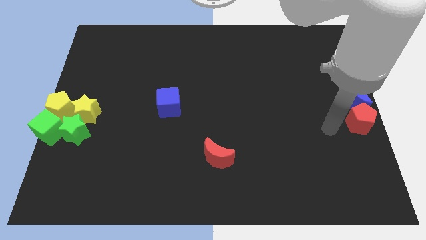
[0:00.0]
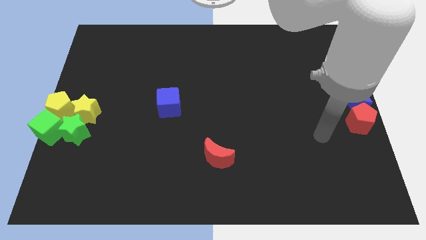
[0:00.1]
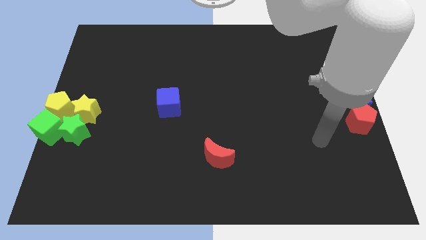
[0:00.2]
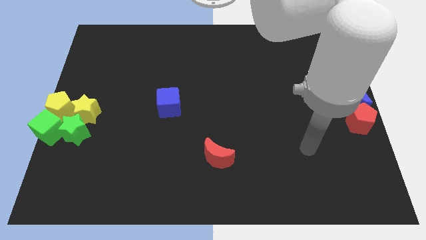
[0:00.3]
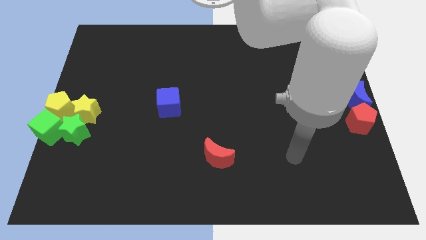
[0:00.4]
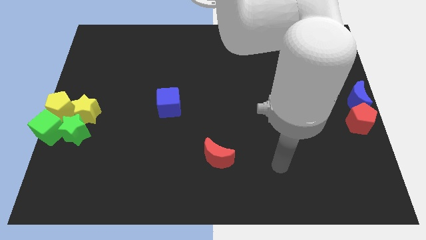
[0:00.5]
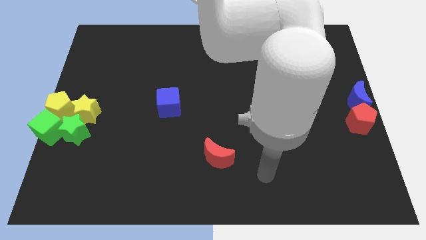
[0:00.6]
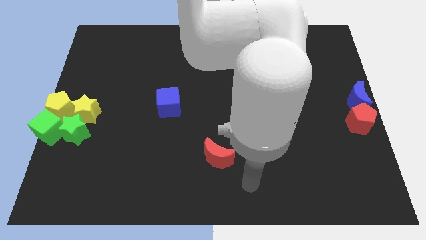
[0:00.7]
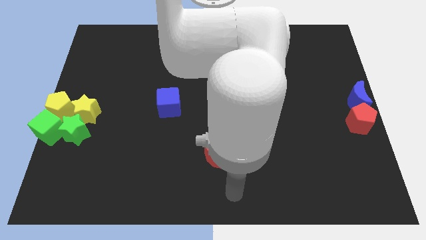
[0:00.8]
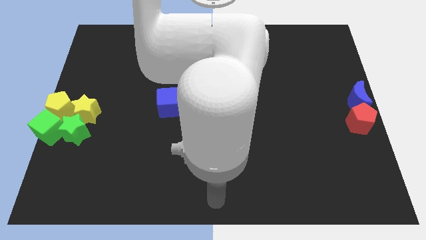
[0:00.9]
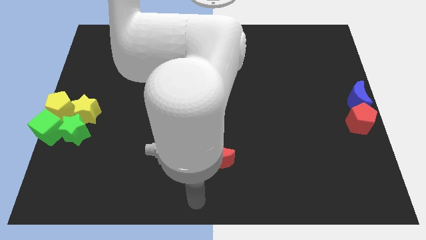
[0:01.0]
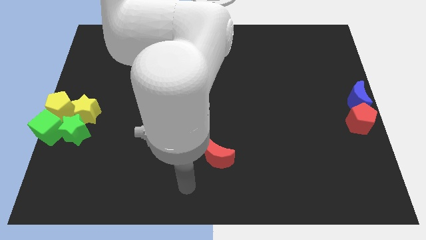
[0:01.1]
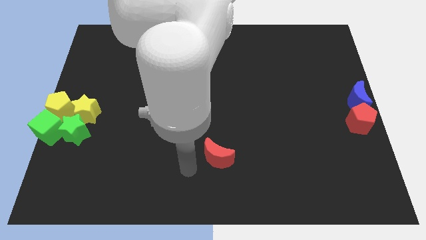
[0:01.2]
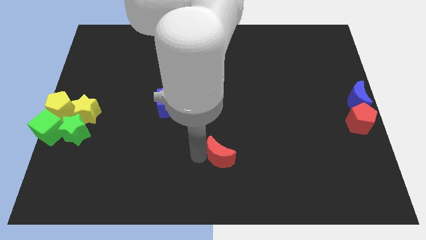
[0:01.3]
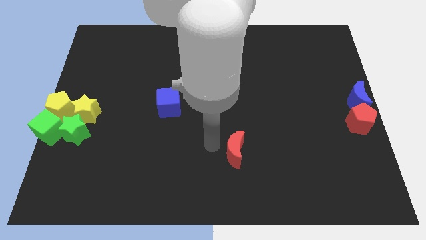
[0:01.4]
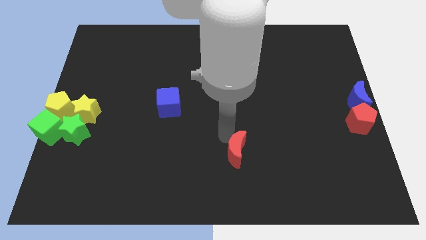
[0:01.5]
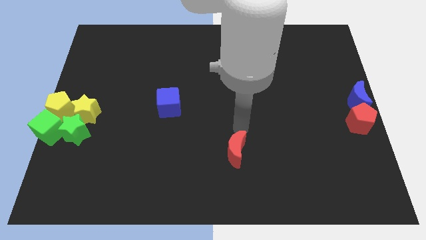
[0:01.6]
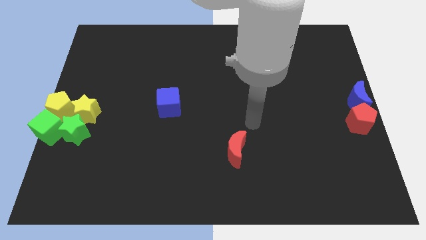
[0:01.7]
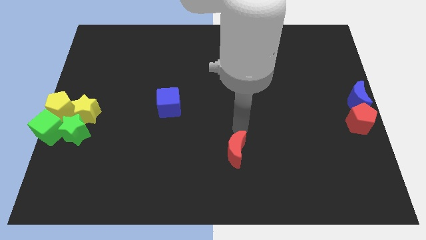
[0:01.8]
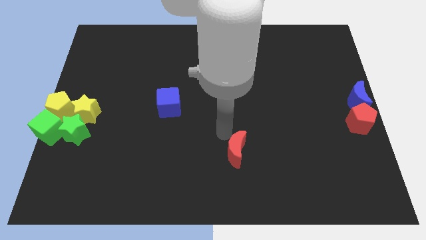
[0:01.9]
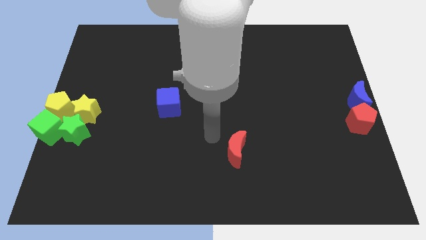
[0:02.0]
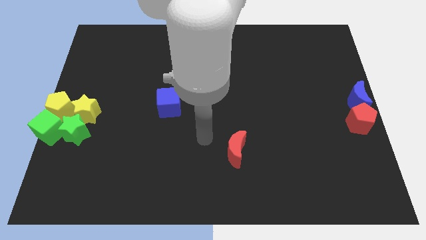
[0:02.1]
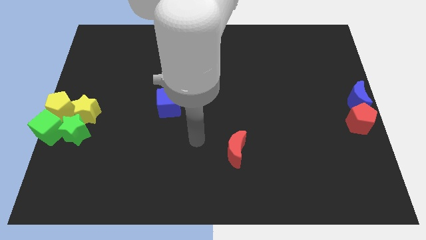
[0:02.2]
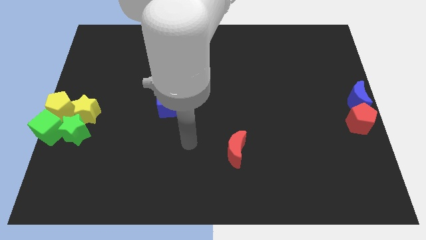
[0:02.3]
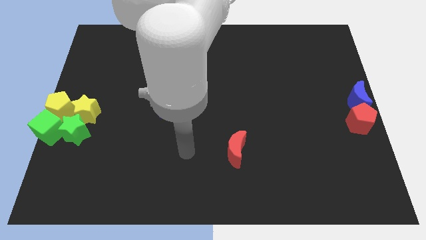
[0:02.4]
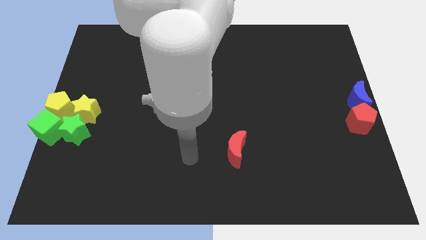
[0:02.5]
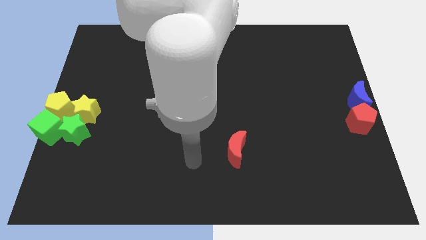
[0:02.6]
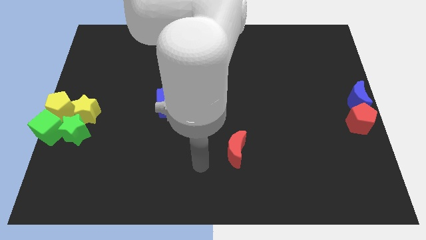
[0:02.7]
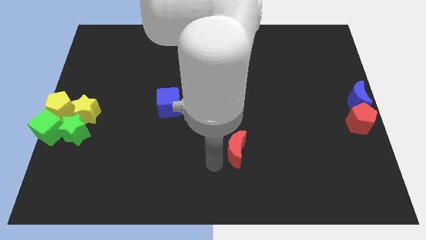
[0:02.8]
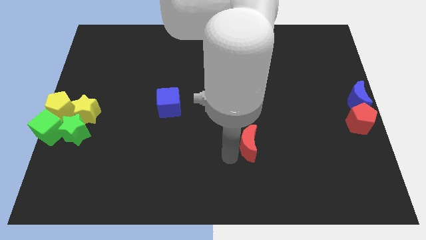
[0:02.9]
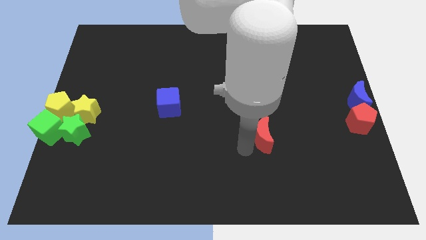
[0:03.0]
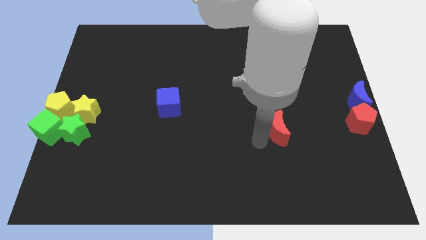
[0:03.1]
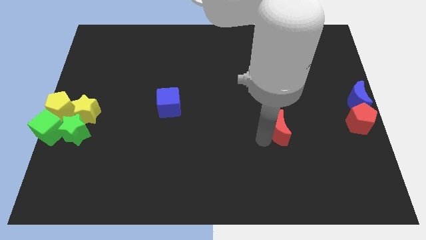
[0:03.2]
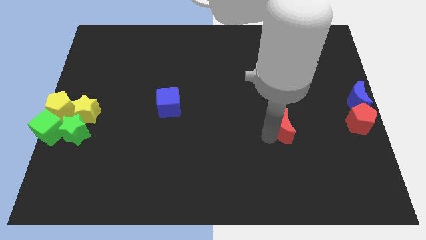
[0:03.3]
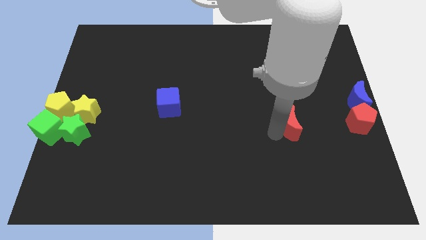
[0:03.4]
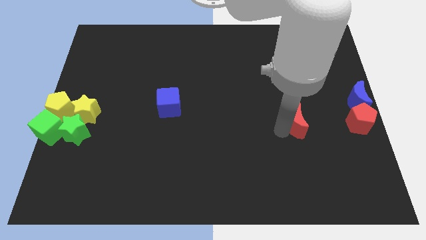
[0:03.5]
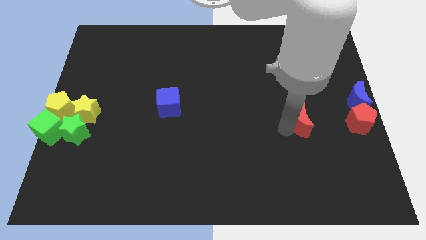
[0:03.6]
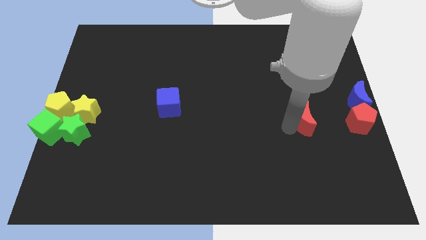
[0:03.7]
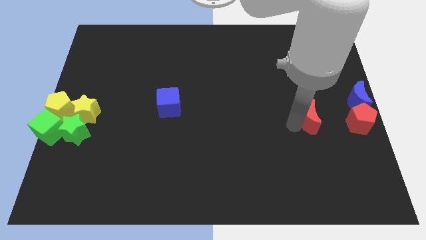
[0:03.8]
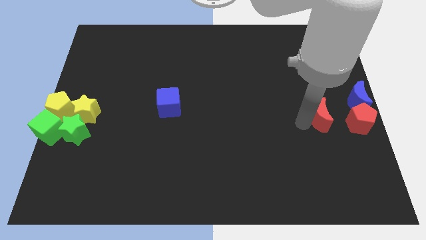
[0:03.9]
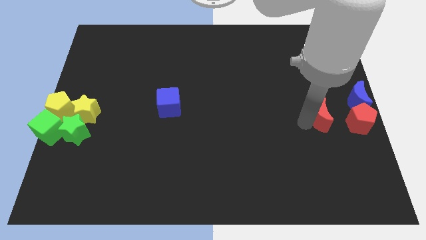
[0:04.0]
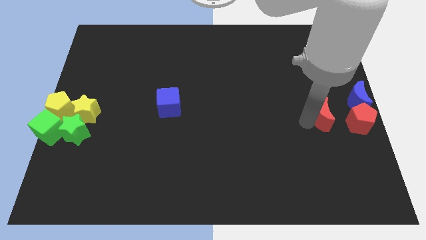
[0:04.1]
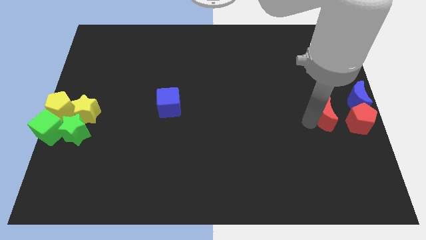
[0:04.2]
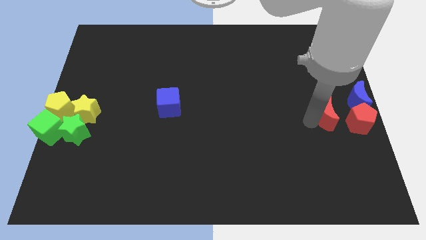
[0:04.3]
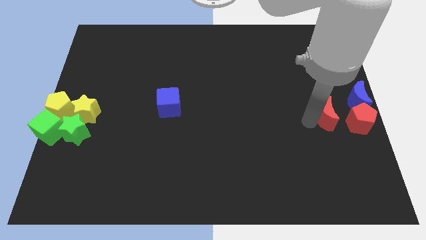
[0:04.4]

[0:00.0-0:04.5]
push the red crescent close to the red pentagon

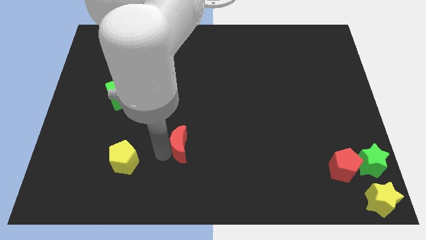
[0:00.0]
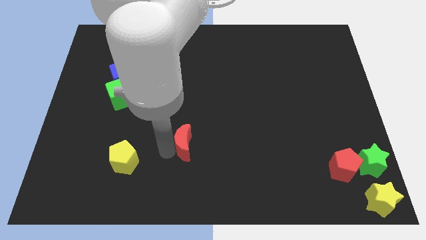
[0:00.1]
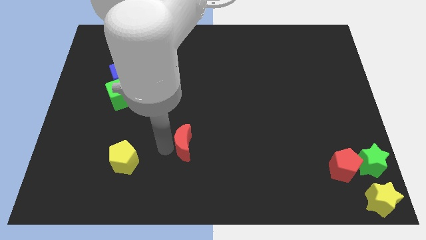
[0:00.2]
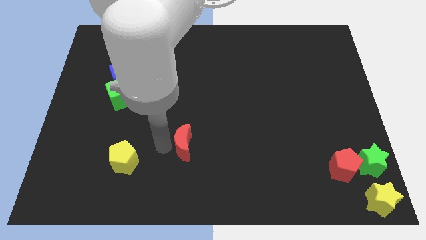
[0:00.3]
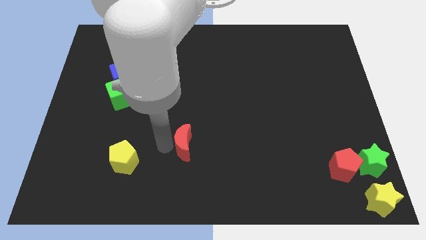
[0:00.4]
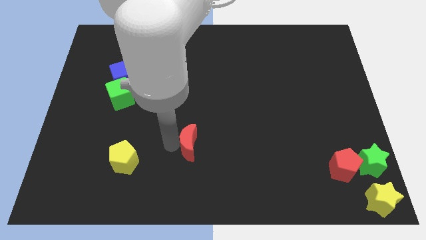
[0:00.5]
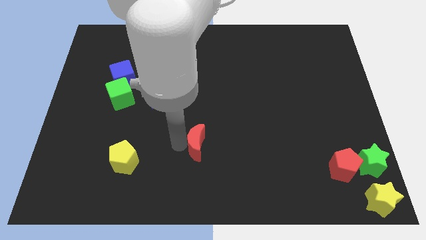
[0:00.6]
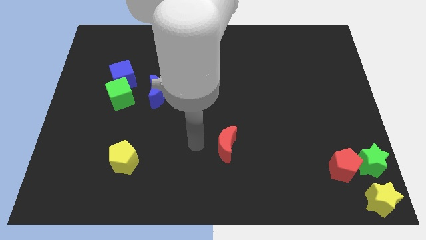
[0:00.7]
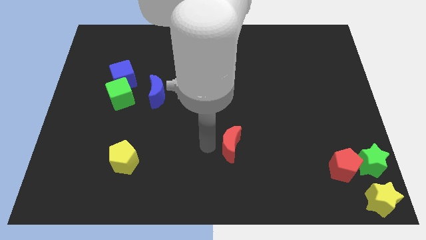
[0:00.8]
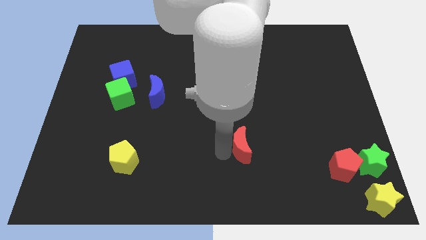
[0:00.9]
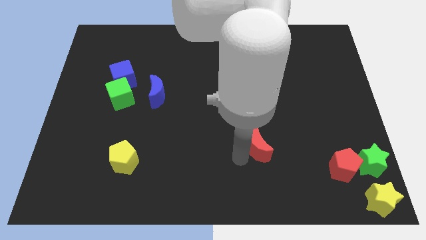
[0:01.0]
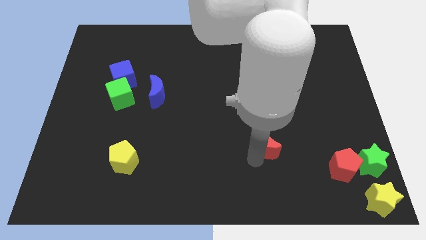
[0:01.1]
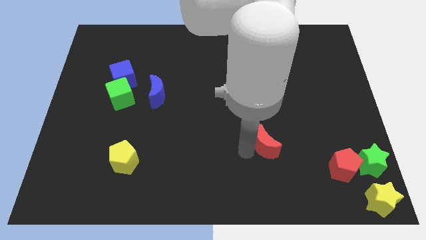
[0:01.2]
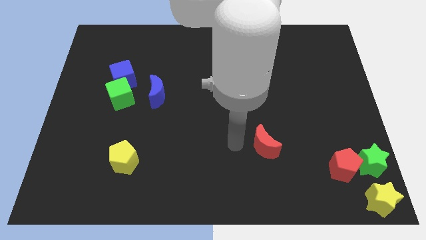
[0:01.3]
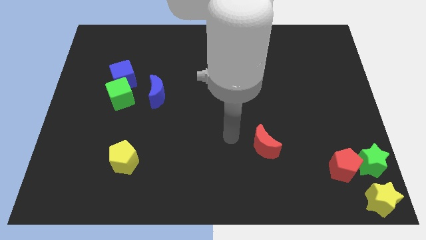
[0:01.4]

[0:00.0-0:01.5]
push the red crescent slightly to the right side

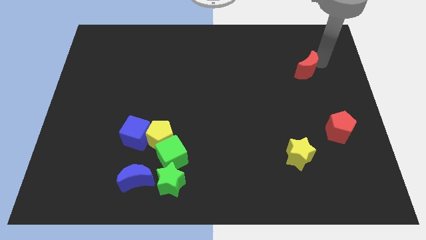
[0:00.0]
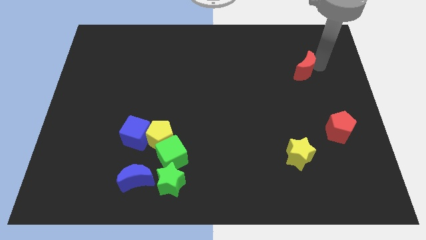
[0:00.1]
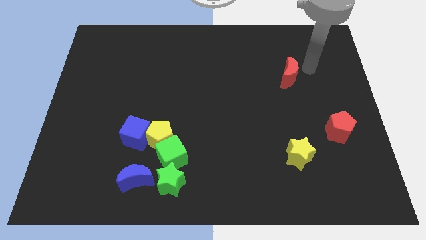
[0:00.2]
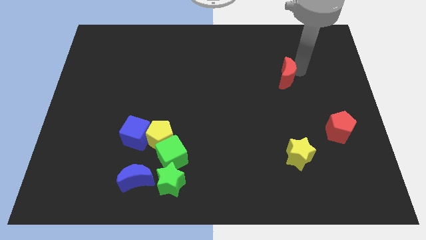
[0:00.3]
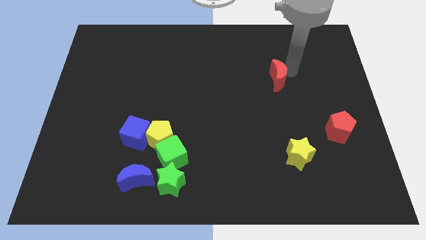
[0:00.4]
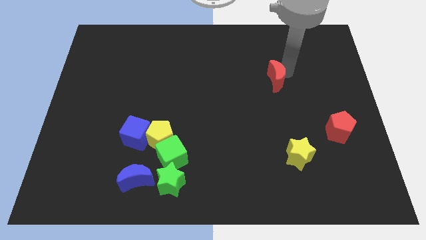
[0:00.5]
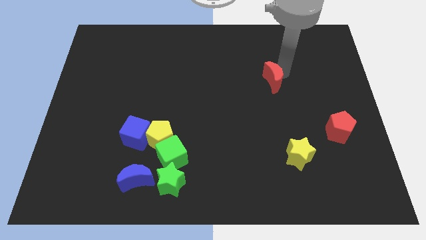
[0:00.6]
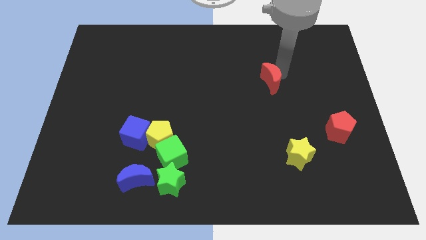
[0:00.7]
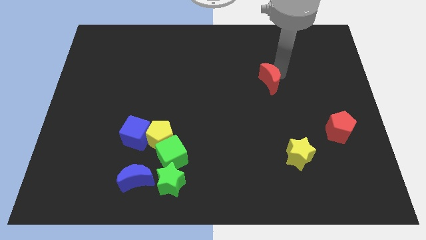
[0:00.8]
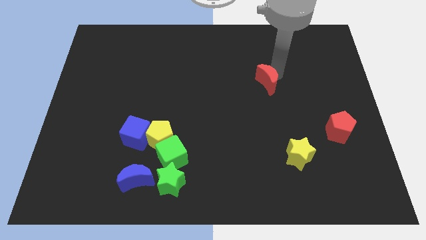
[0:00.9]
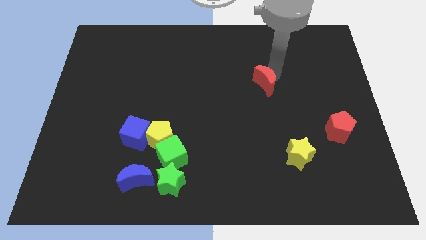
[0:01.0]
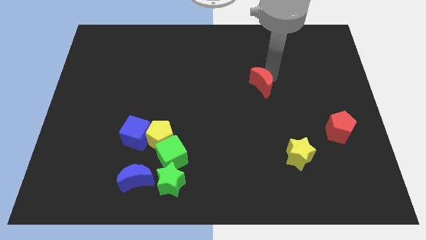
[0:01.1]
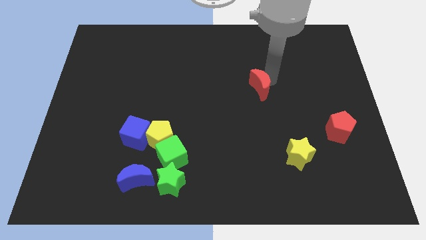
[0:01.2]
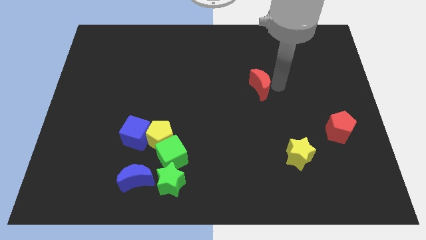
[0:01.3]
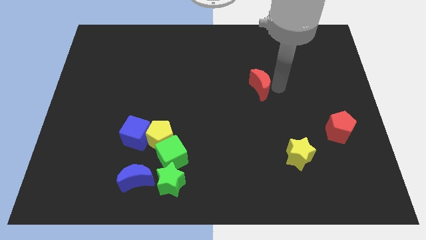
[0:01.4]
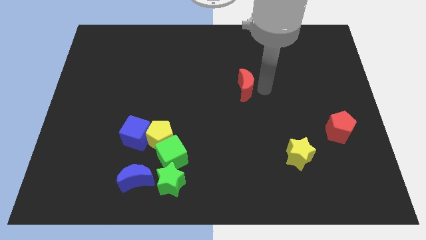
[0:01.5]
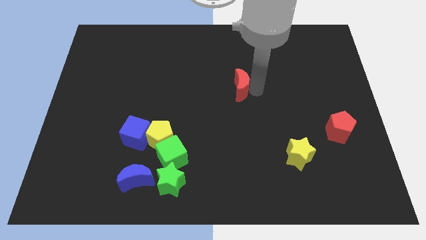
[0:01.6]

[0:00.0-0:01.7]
place the red crescent at the center of the board

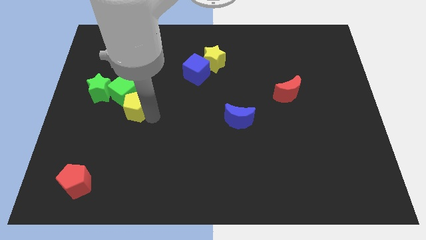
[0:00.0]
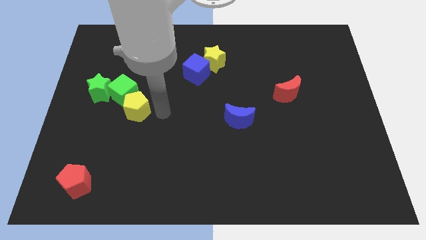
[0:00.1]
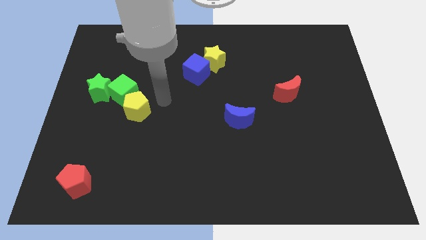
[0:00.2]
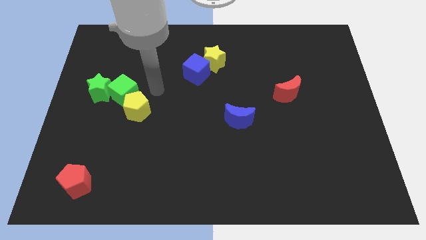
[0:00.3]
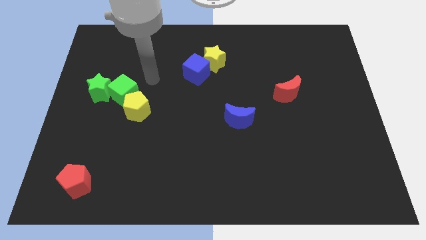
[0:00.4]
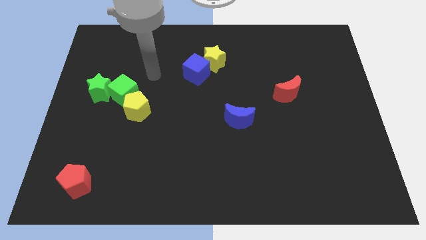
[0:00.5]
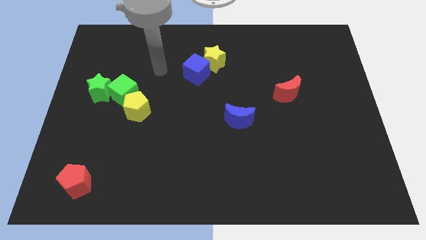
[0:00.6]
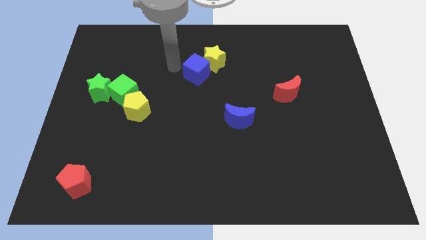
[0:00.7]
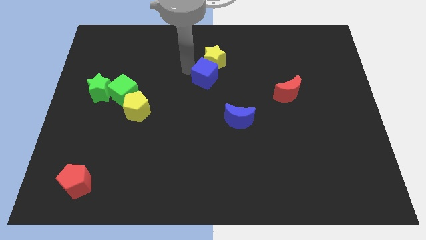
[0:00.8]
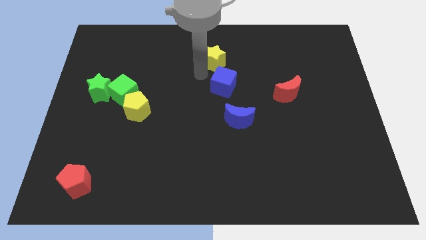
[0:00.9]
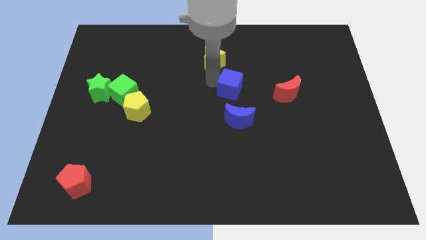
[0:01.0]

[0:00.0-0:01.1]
slightly push the blue cube towards the top right of the board

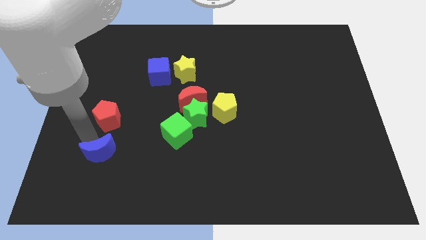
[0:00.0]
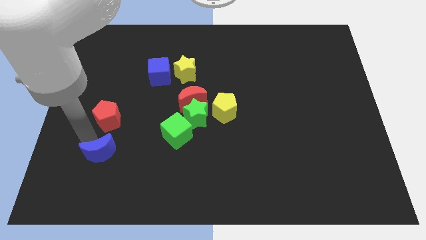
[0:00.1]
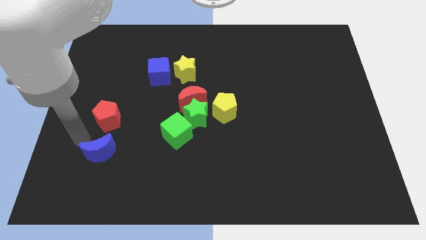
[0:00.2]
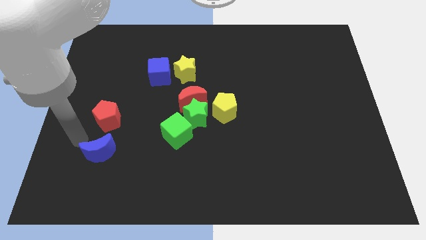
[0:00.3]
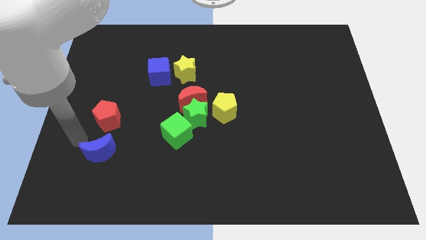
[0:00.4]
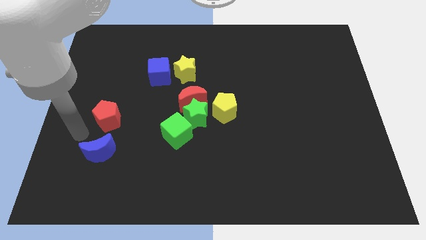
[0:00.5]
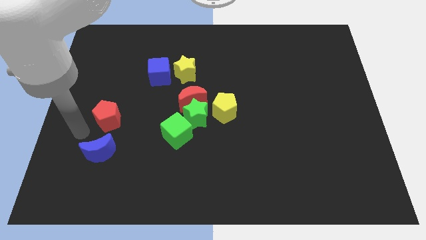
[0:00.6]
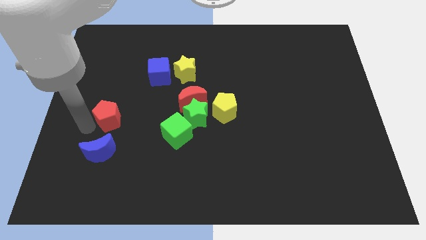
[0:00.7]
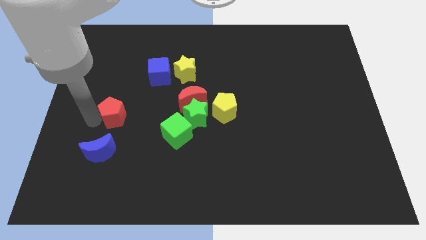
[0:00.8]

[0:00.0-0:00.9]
place the arm left to the red pentagon
